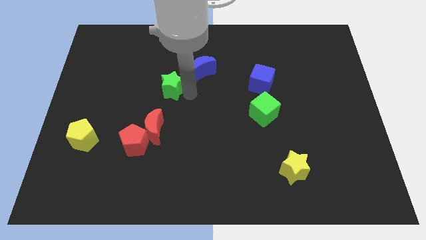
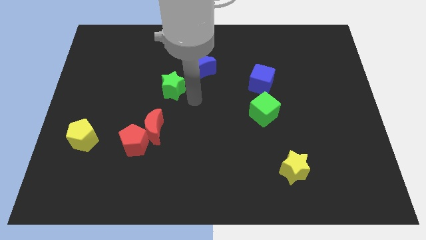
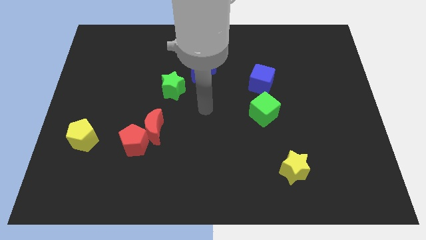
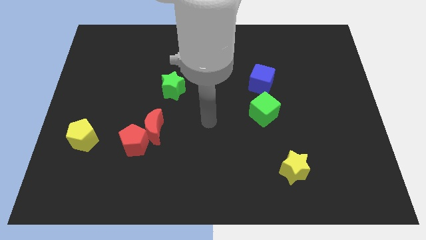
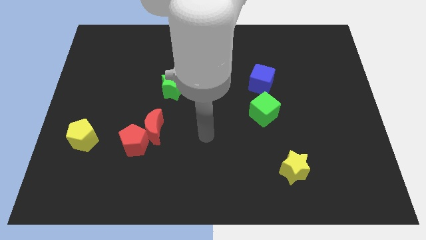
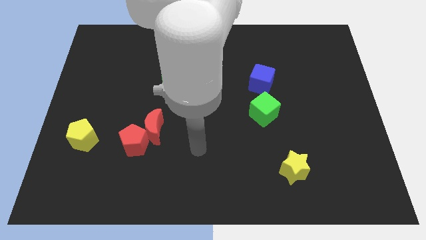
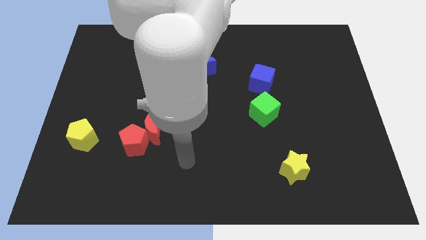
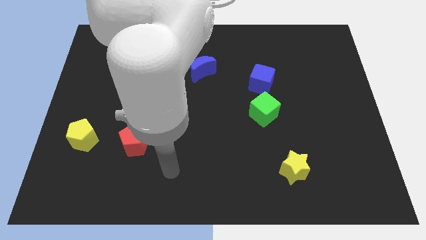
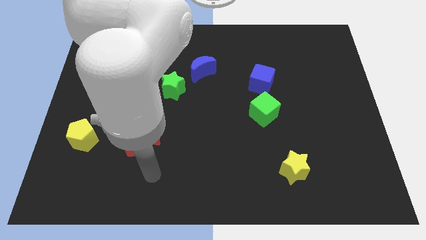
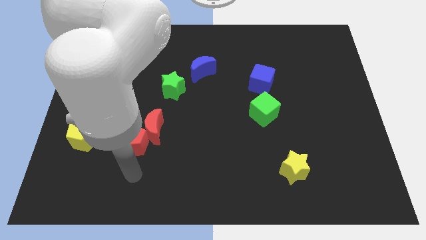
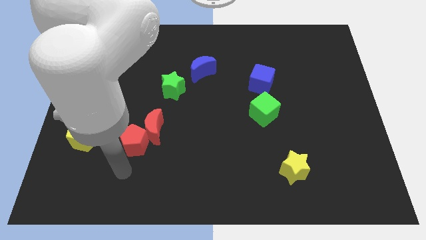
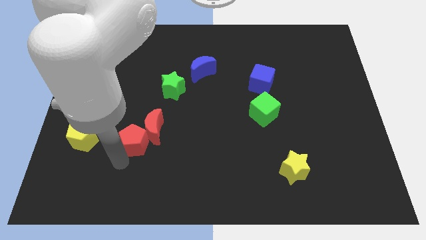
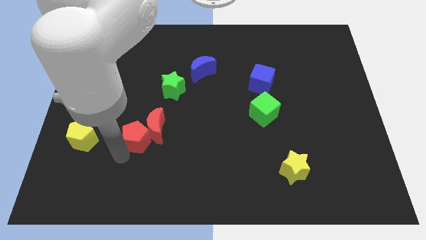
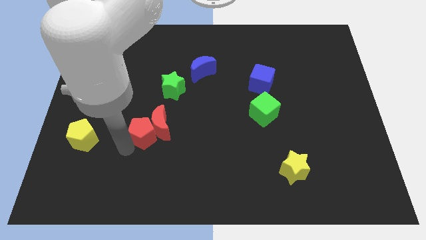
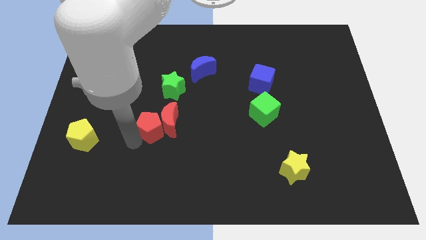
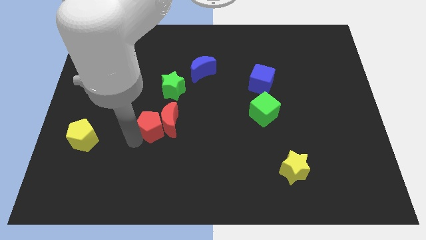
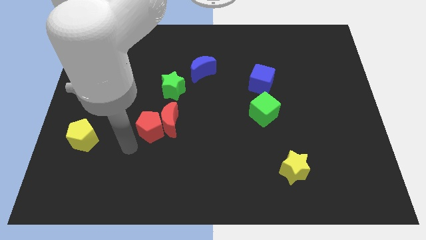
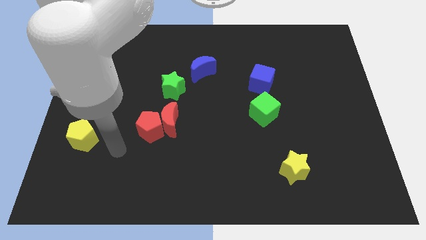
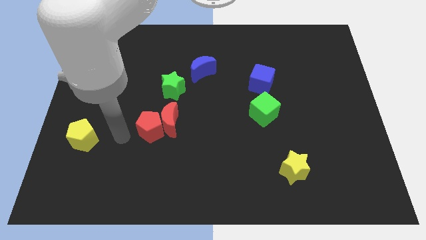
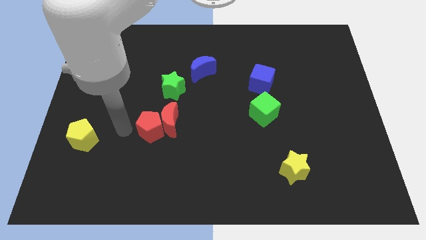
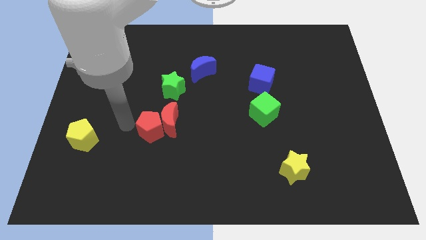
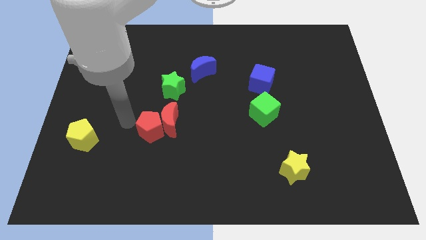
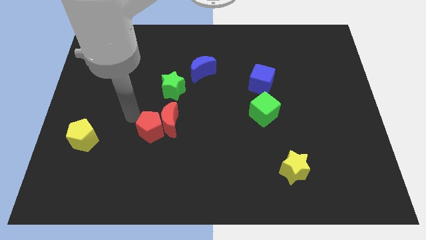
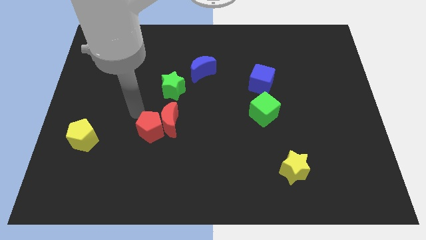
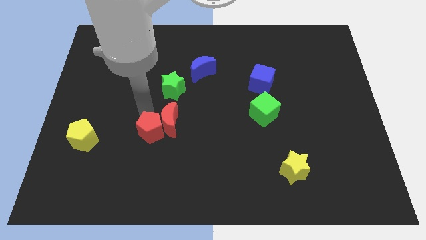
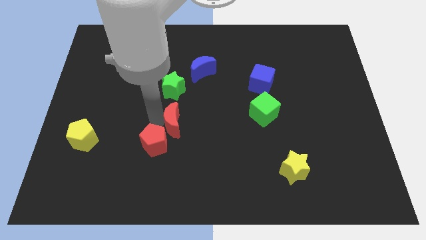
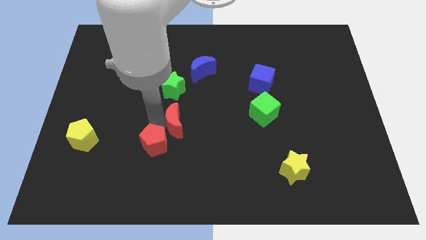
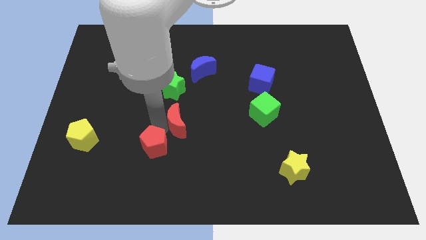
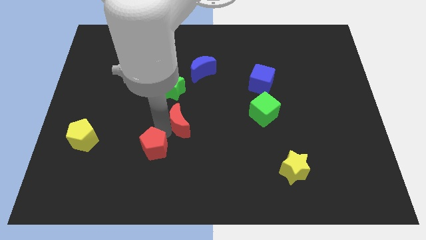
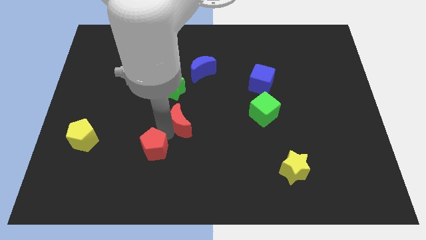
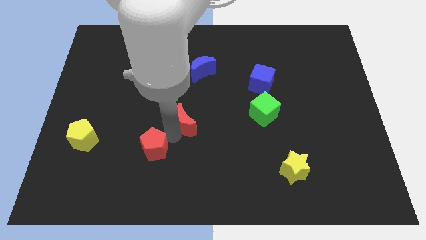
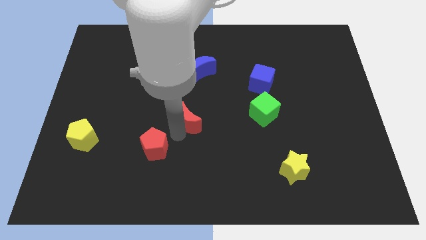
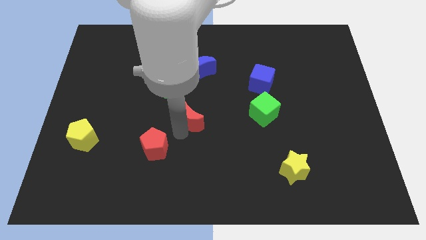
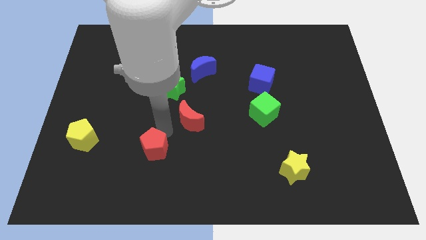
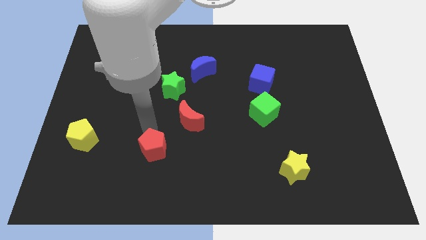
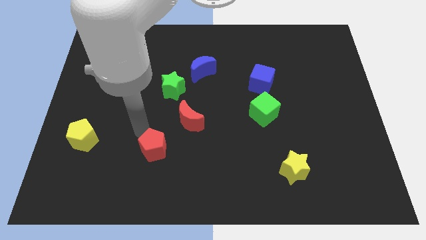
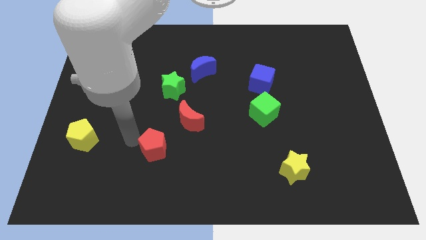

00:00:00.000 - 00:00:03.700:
separate red pentagon and red crescent

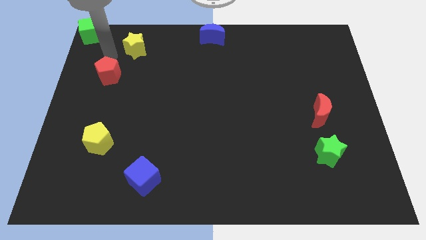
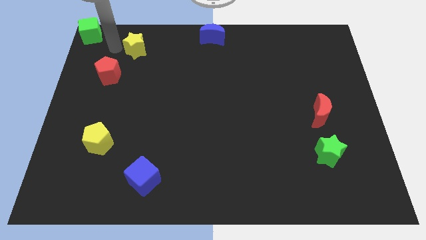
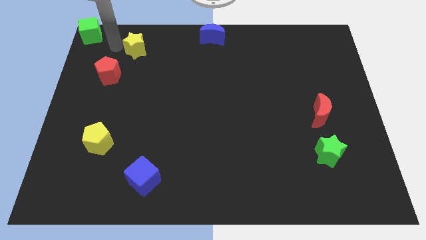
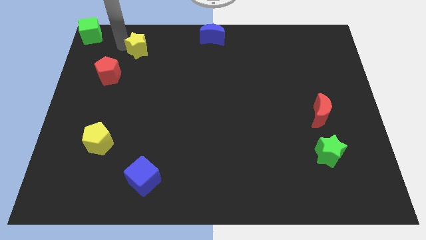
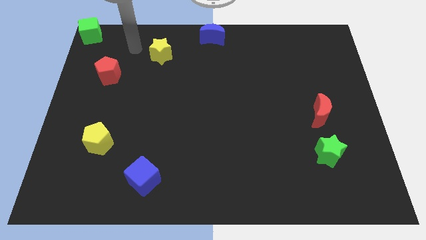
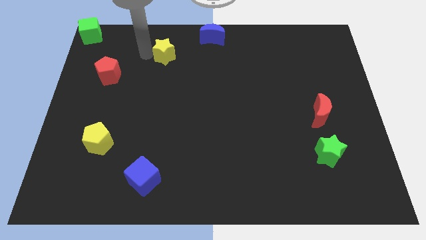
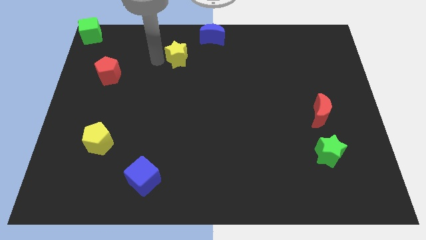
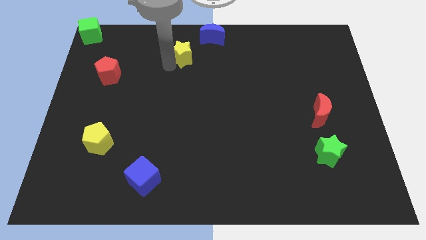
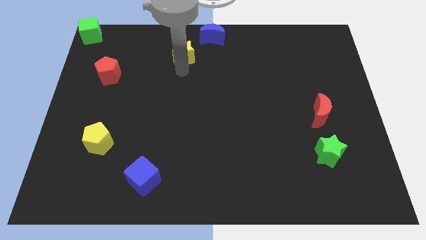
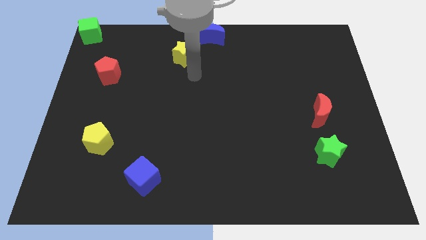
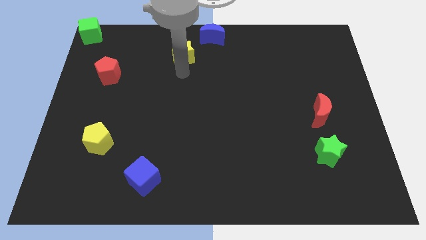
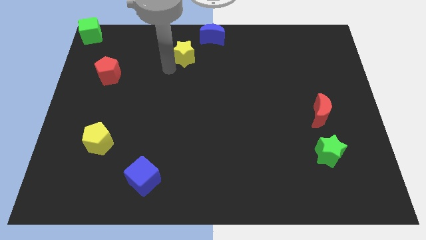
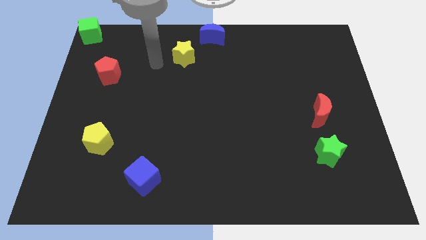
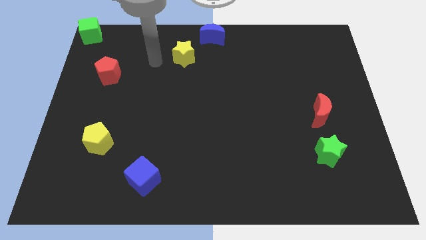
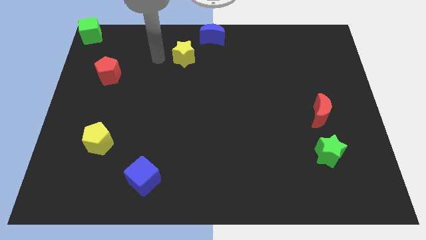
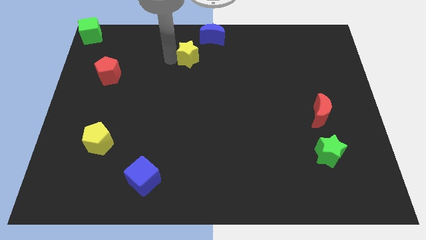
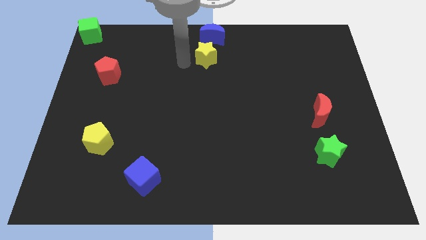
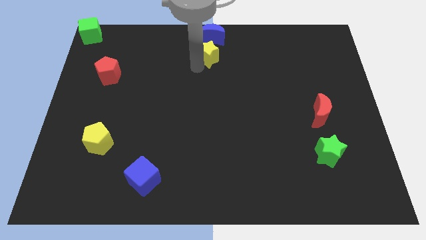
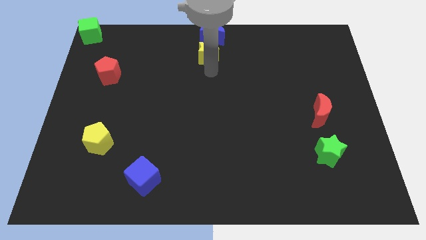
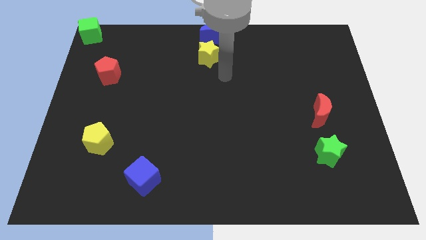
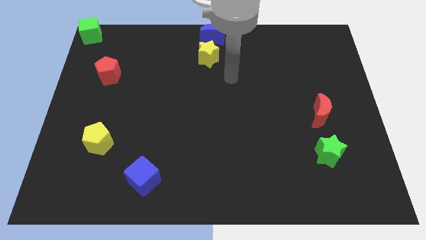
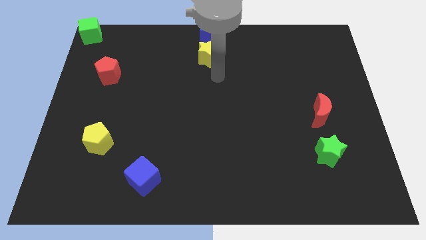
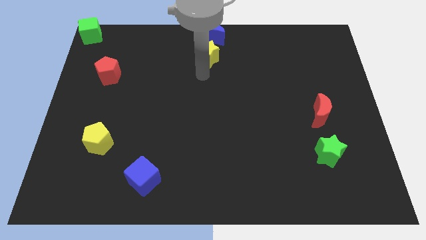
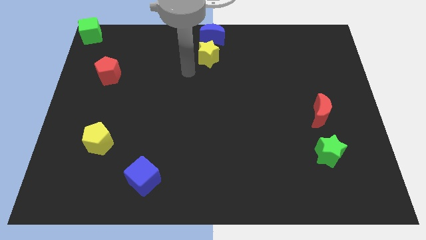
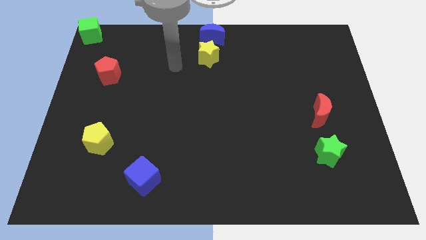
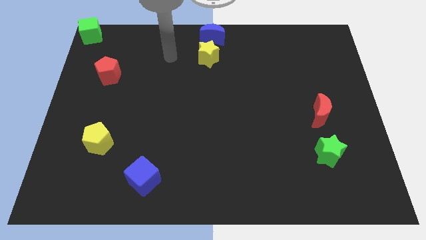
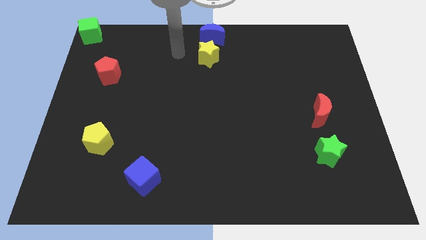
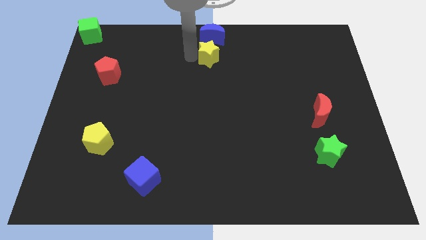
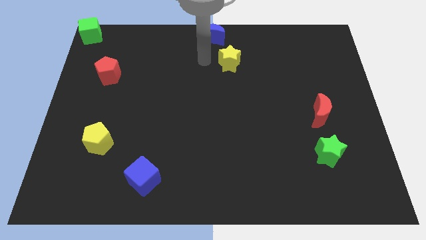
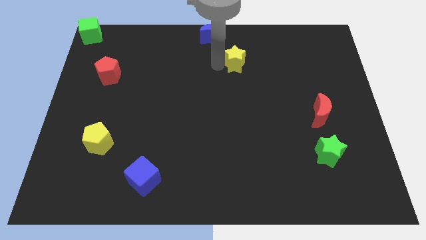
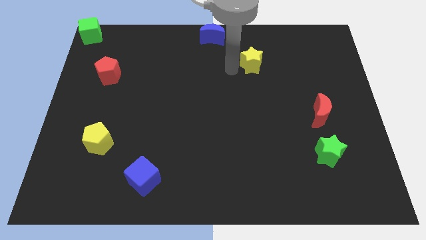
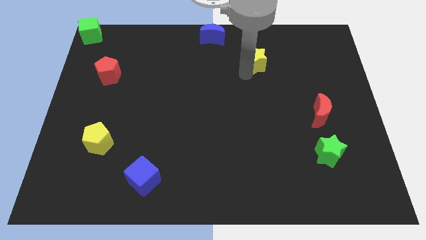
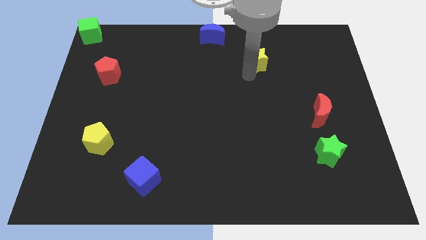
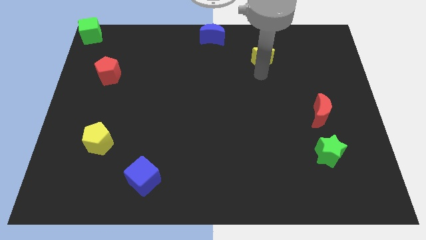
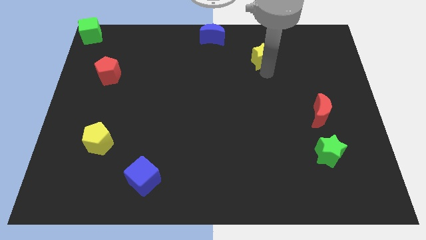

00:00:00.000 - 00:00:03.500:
place yellow star diagonally in between blue crescent and red moon

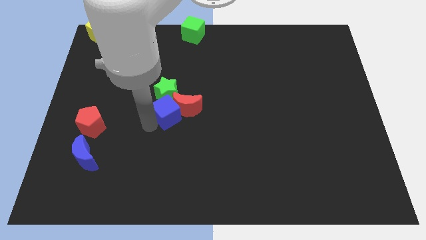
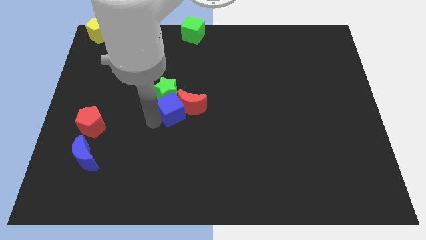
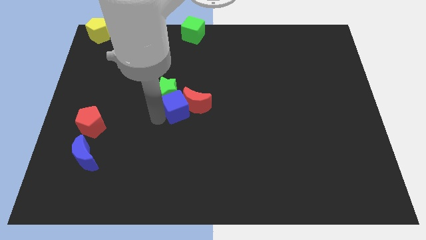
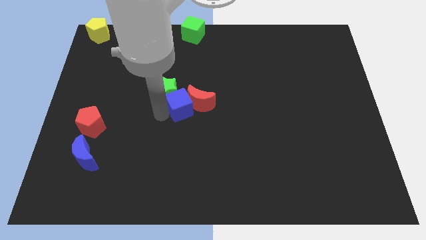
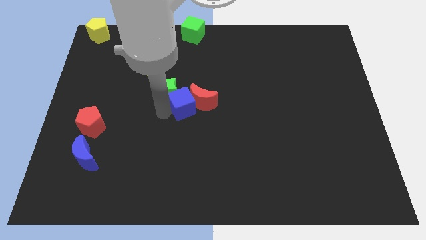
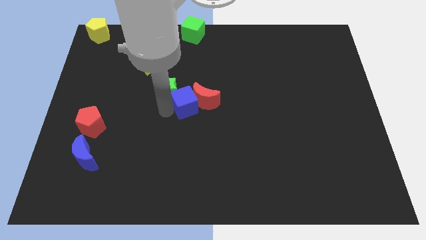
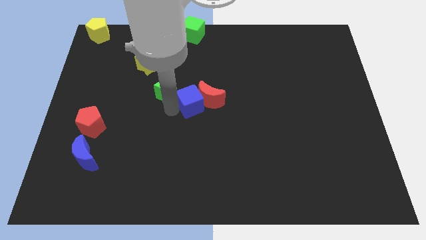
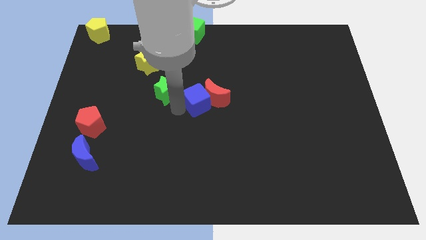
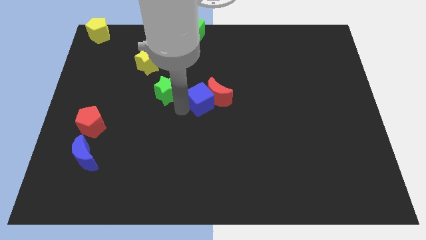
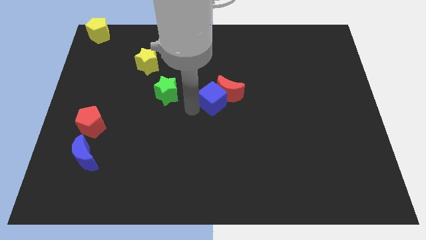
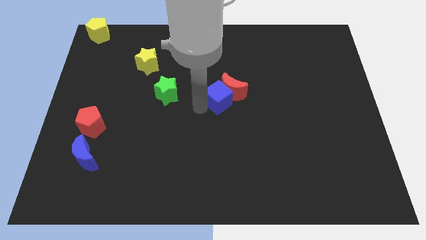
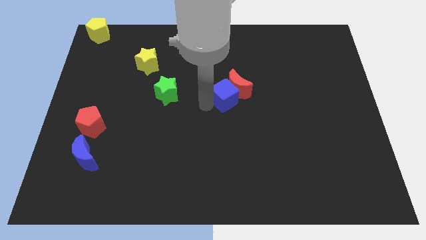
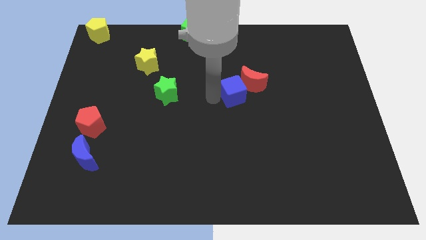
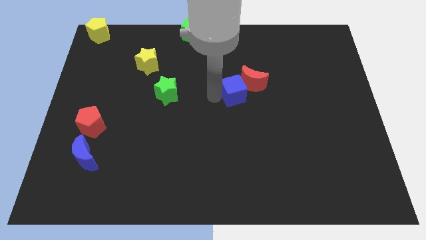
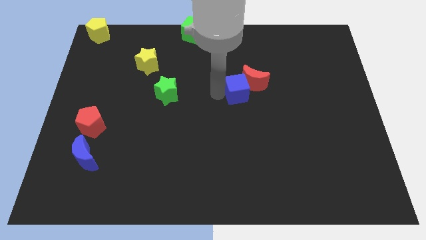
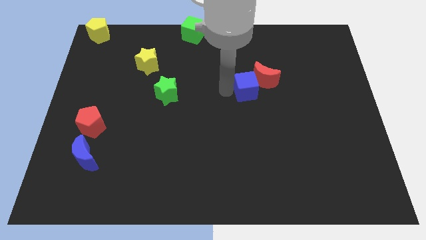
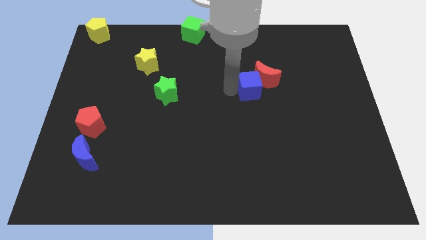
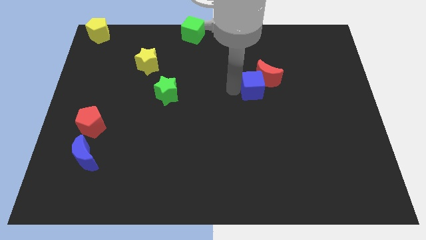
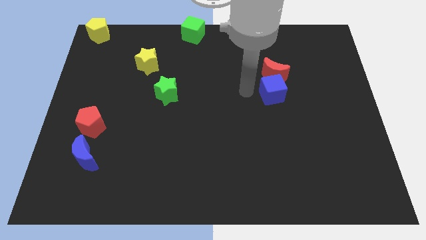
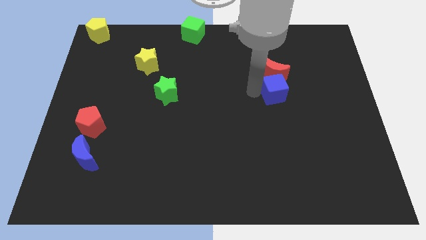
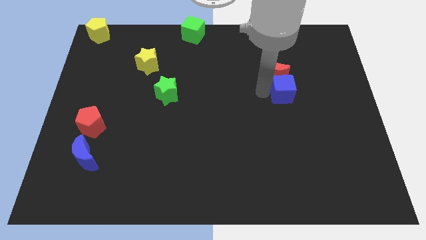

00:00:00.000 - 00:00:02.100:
push both the blue cube and the red moon towards the top right side
